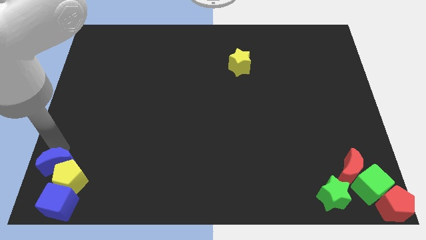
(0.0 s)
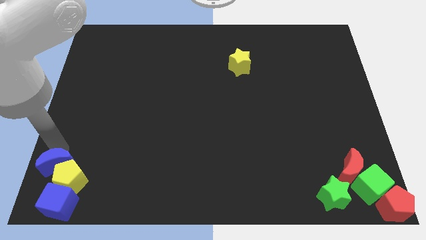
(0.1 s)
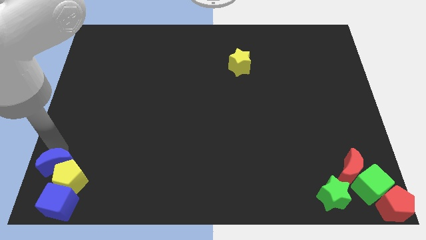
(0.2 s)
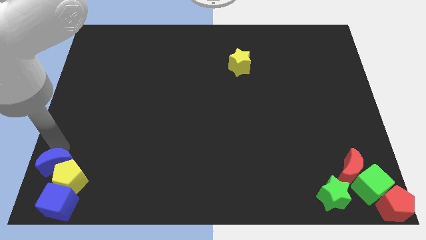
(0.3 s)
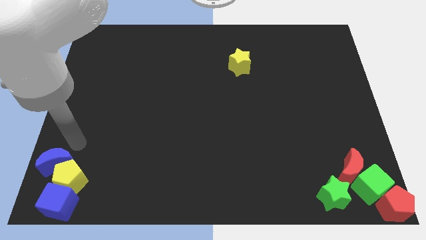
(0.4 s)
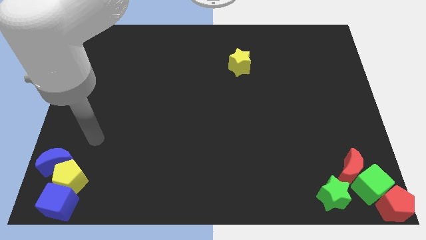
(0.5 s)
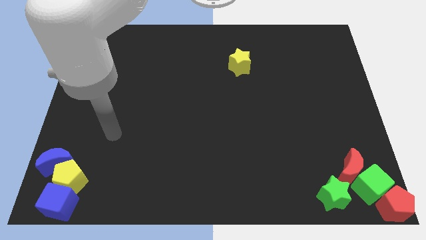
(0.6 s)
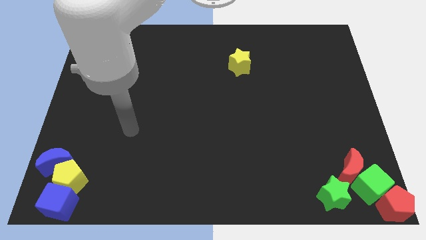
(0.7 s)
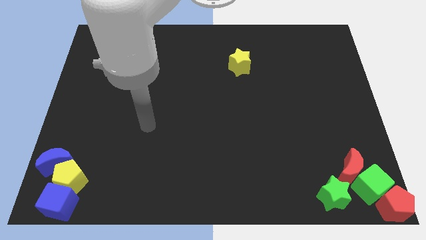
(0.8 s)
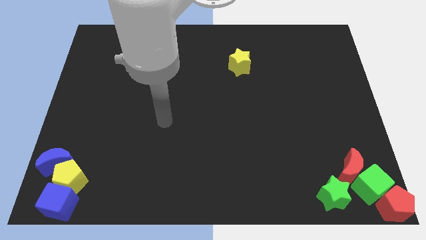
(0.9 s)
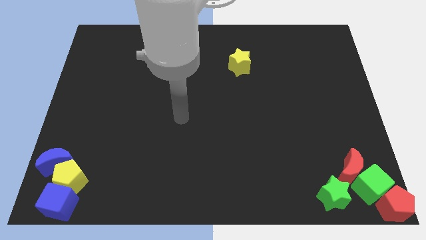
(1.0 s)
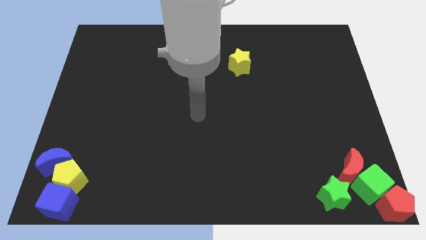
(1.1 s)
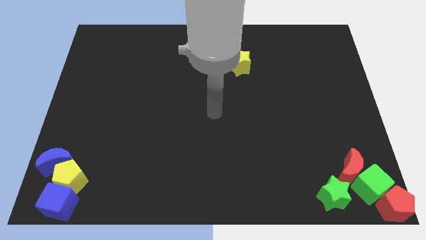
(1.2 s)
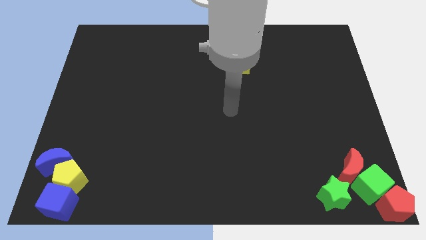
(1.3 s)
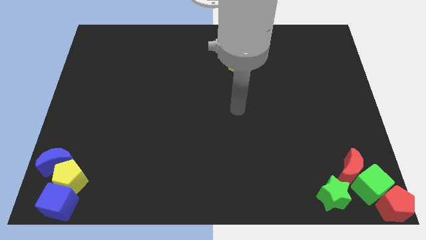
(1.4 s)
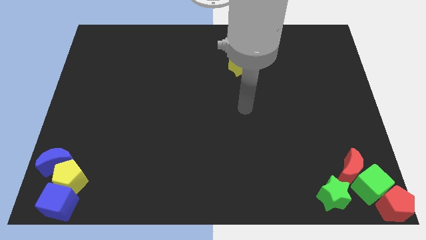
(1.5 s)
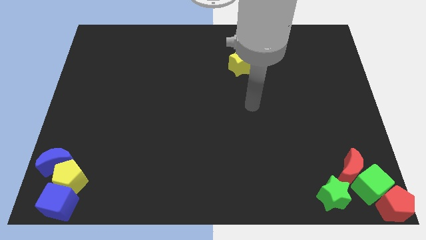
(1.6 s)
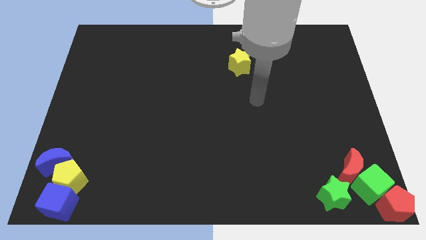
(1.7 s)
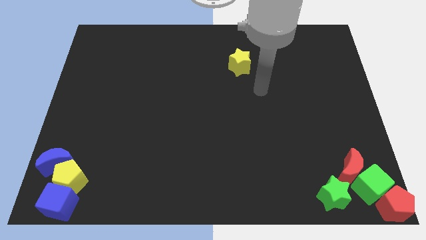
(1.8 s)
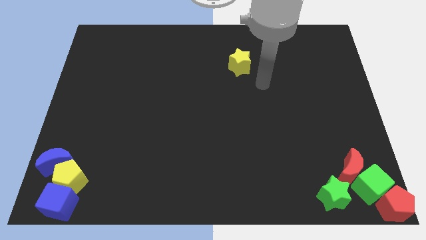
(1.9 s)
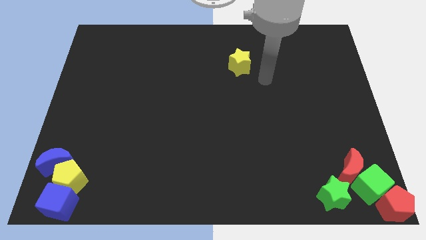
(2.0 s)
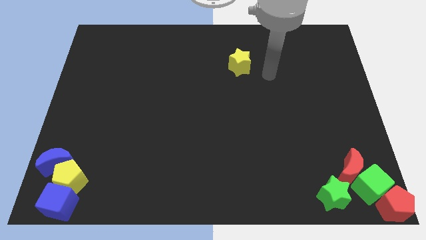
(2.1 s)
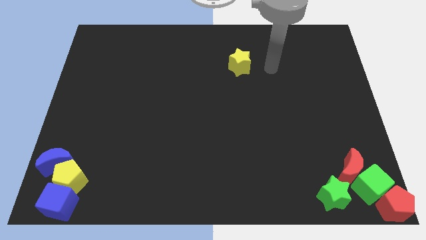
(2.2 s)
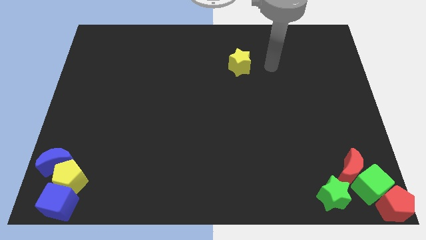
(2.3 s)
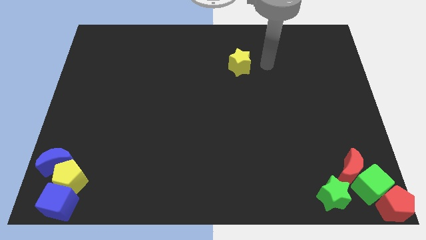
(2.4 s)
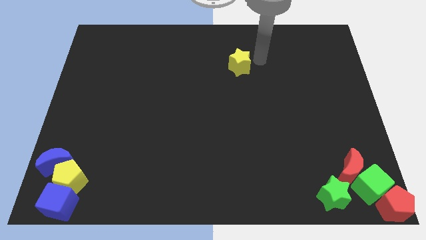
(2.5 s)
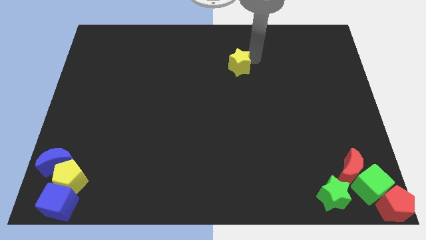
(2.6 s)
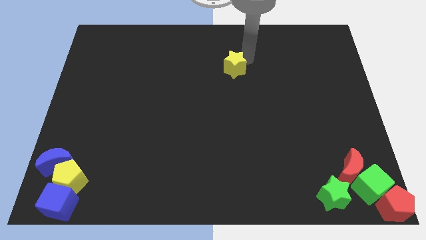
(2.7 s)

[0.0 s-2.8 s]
move your arm from blue moon to yellow star

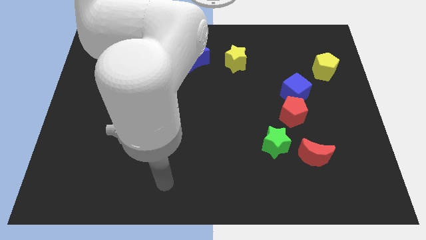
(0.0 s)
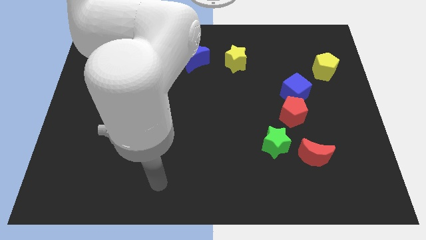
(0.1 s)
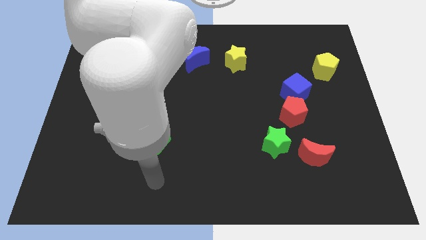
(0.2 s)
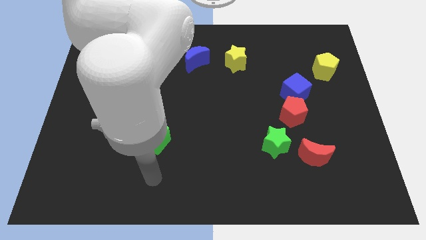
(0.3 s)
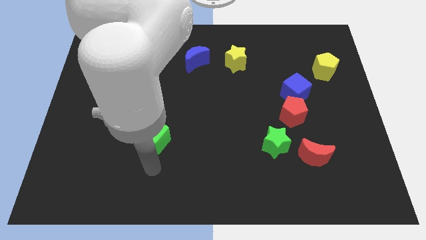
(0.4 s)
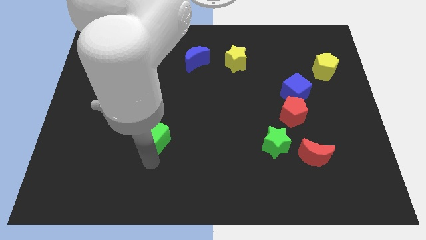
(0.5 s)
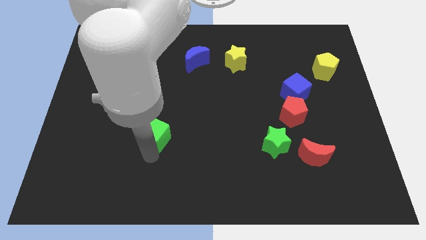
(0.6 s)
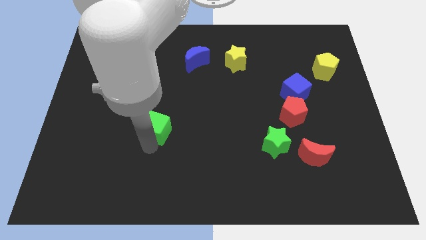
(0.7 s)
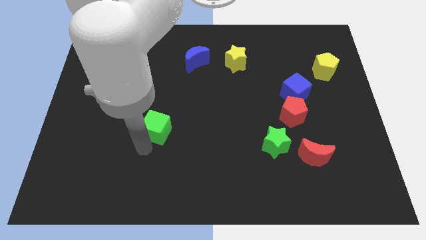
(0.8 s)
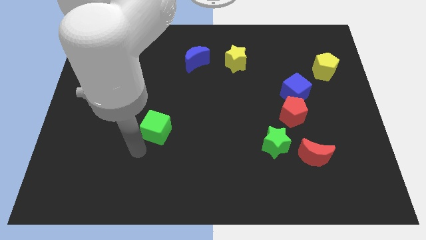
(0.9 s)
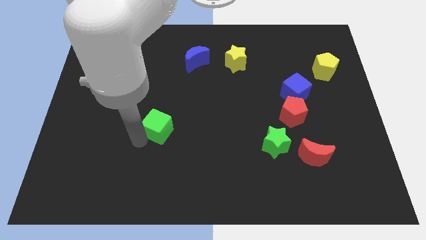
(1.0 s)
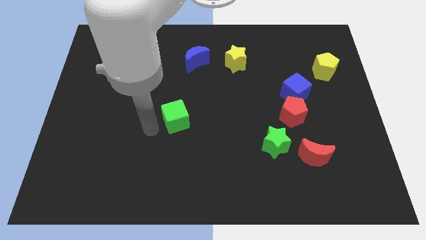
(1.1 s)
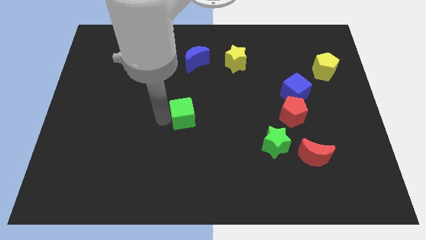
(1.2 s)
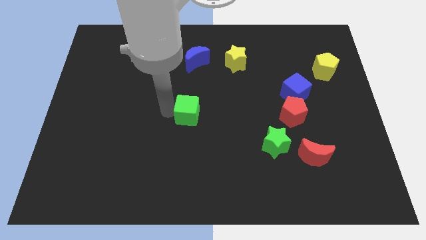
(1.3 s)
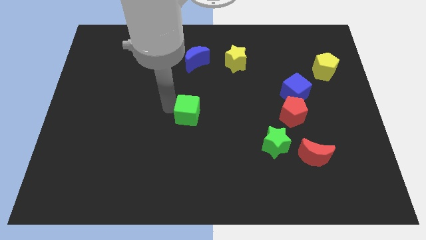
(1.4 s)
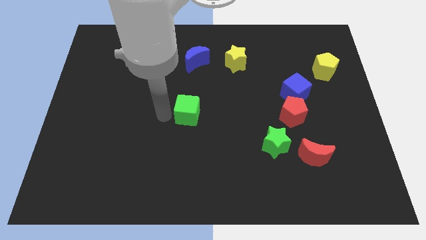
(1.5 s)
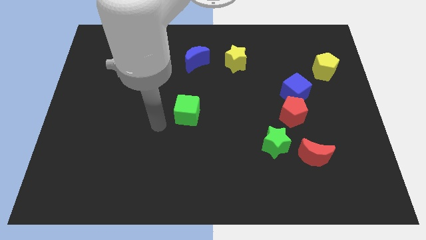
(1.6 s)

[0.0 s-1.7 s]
move the green cube to the center

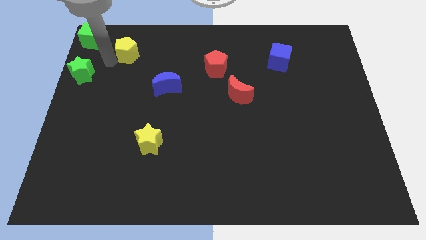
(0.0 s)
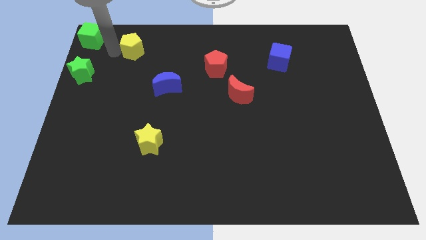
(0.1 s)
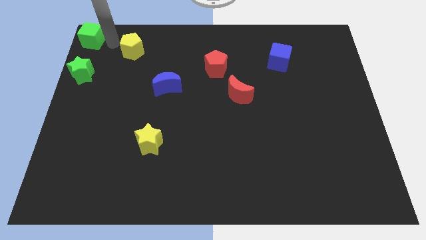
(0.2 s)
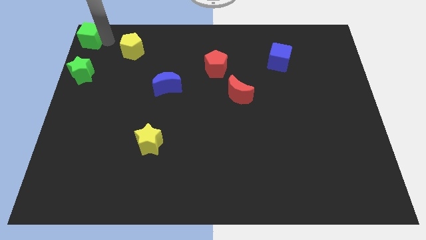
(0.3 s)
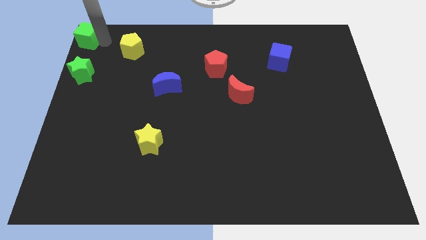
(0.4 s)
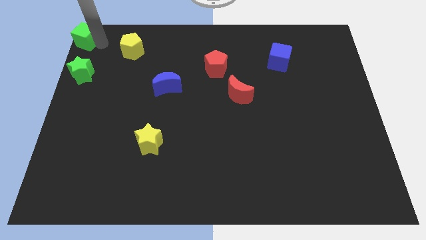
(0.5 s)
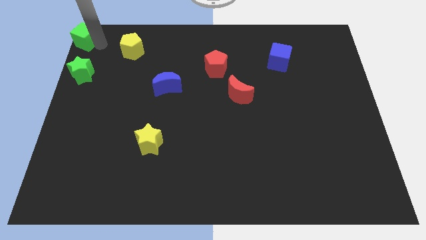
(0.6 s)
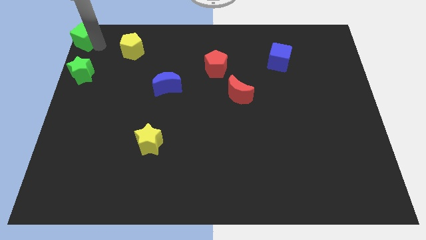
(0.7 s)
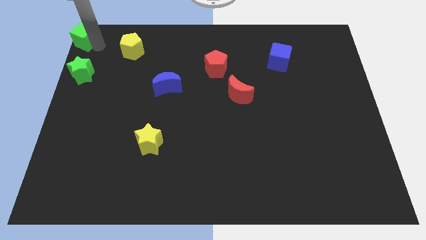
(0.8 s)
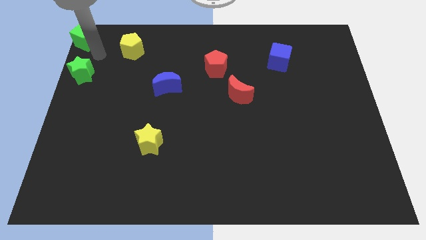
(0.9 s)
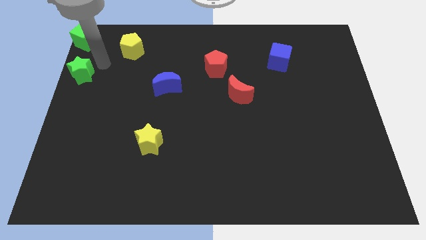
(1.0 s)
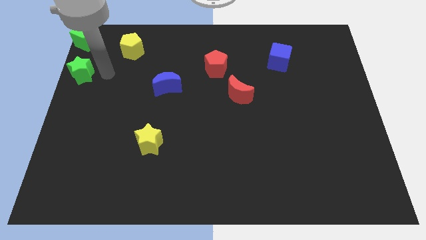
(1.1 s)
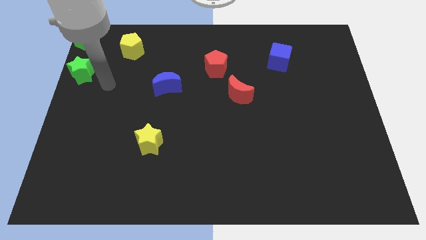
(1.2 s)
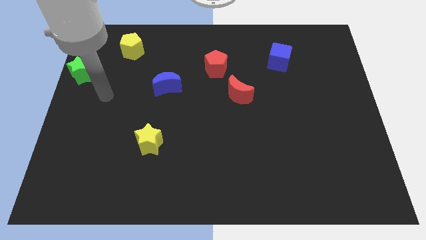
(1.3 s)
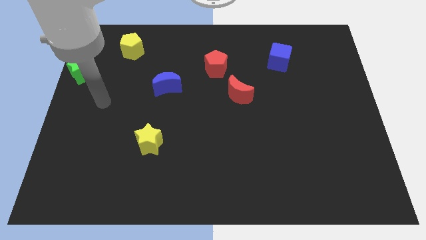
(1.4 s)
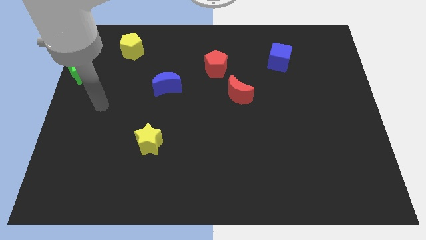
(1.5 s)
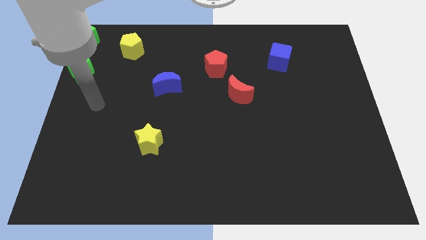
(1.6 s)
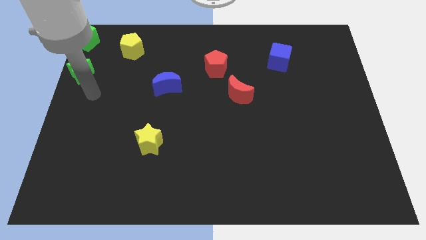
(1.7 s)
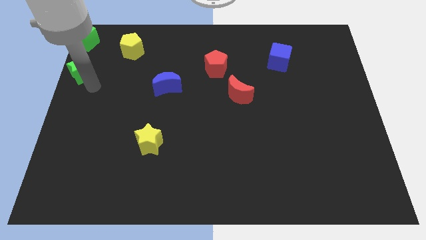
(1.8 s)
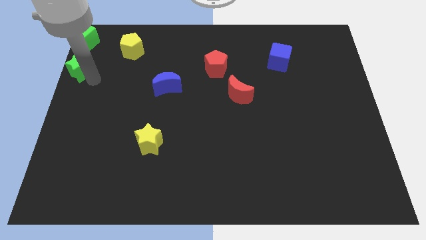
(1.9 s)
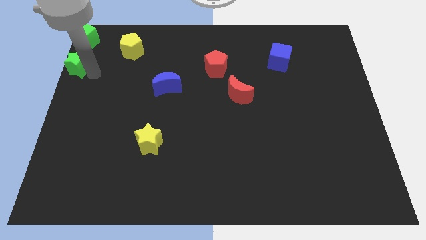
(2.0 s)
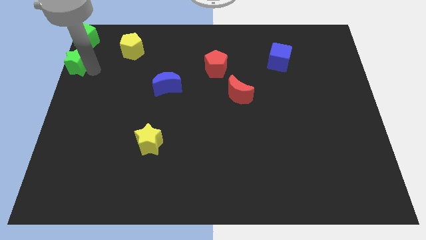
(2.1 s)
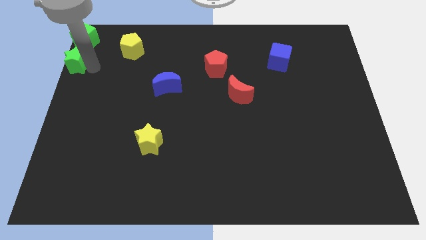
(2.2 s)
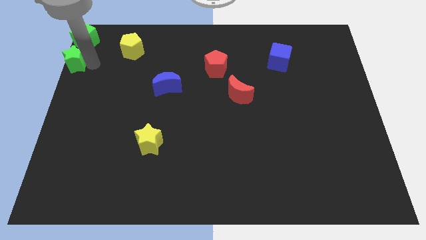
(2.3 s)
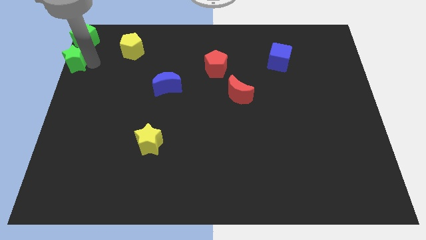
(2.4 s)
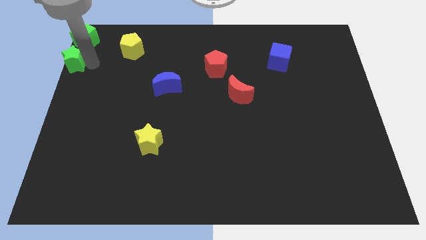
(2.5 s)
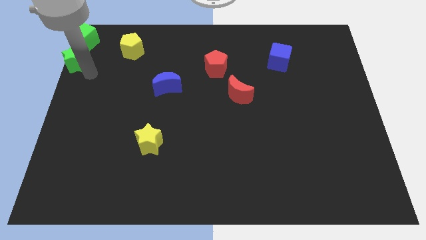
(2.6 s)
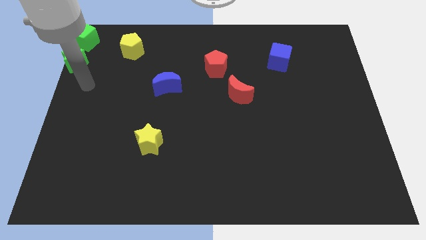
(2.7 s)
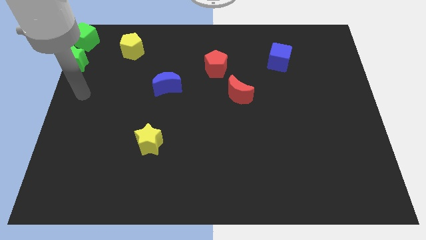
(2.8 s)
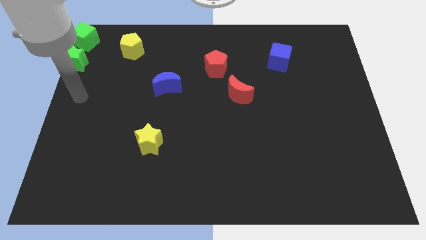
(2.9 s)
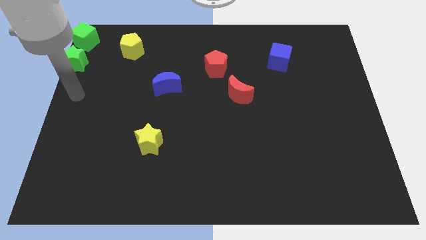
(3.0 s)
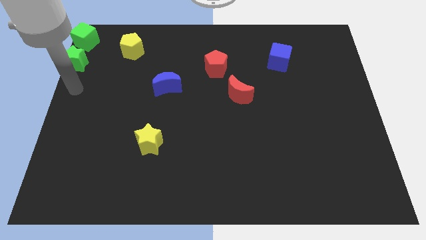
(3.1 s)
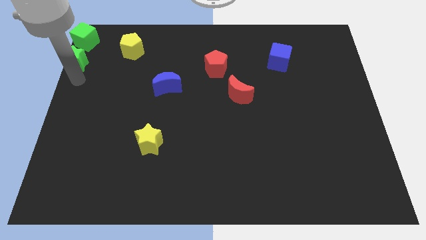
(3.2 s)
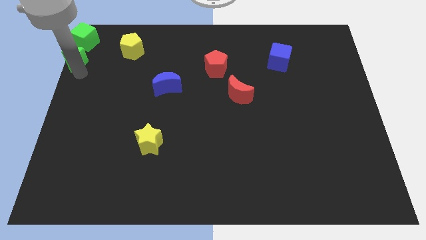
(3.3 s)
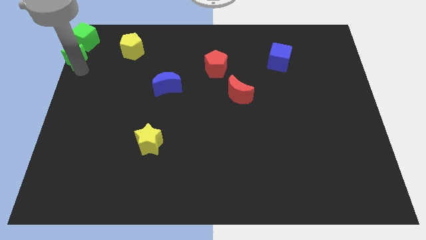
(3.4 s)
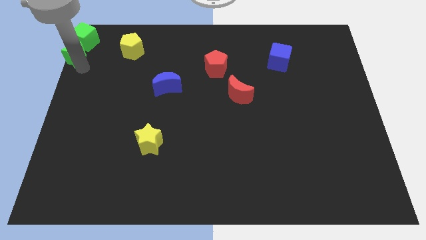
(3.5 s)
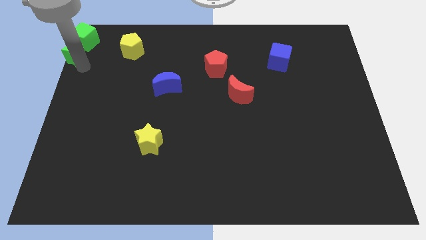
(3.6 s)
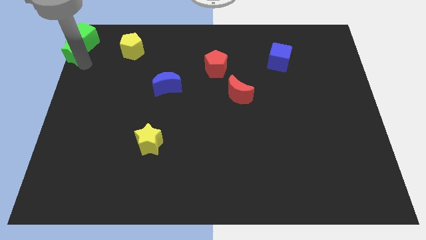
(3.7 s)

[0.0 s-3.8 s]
push the green star close to the green cube

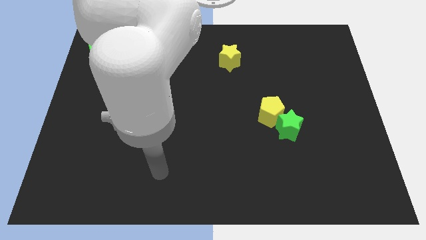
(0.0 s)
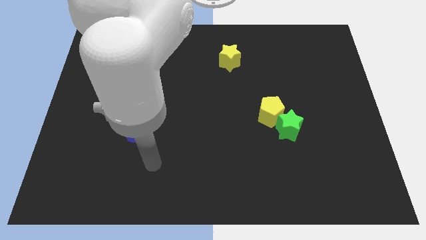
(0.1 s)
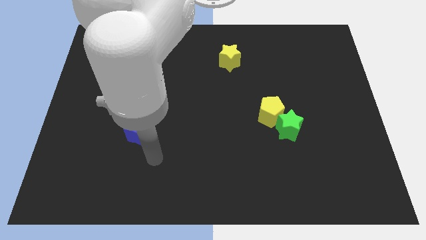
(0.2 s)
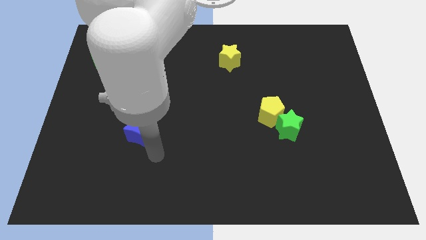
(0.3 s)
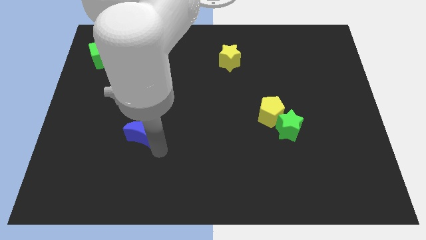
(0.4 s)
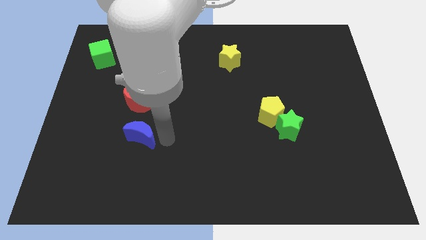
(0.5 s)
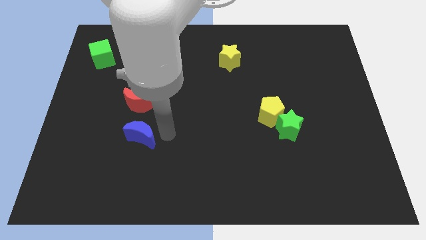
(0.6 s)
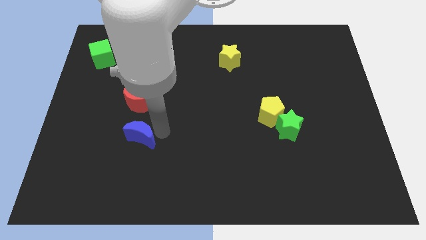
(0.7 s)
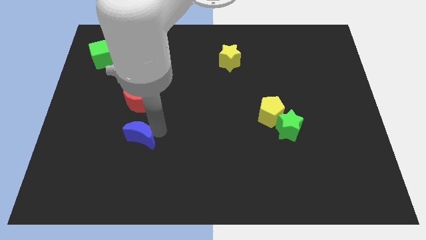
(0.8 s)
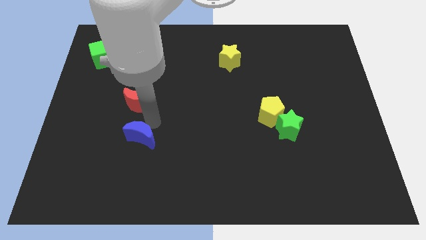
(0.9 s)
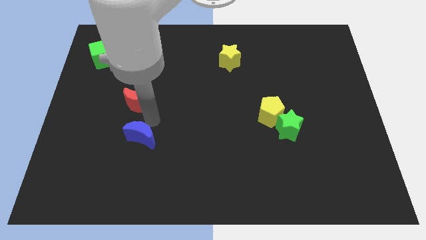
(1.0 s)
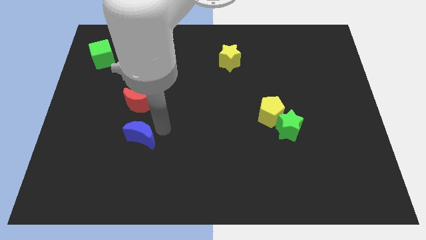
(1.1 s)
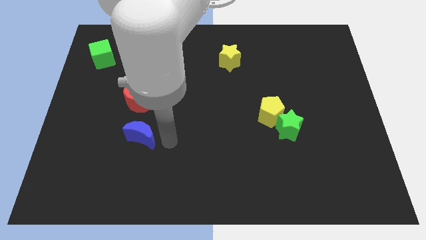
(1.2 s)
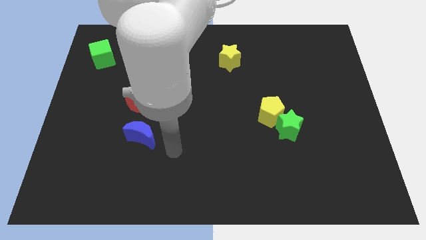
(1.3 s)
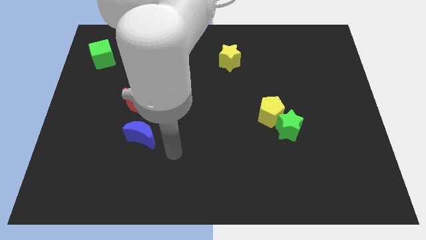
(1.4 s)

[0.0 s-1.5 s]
move the arm towards the blue crescent
